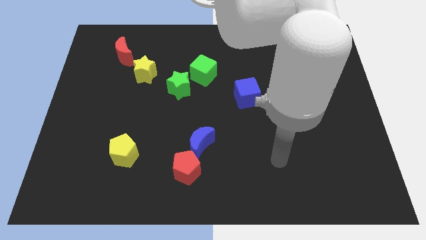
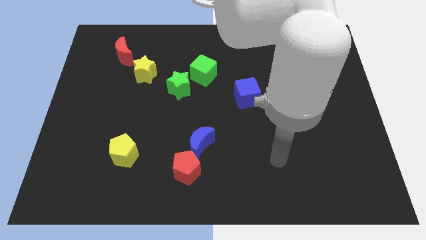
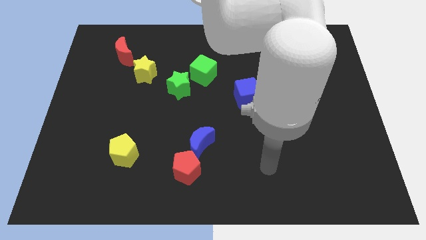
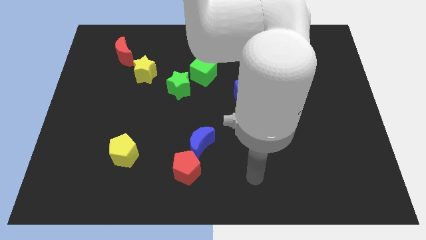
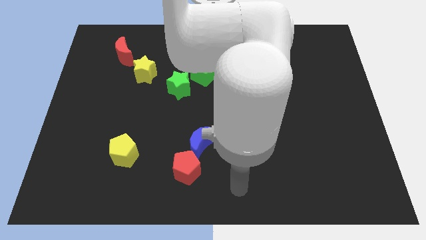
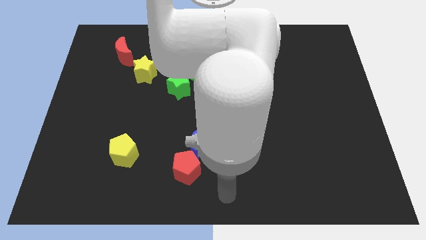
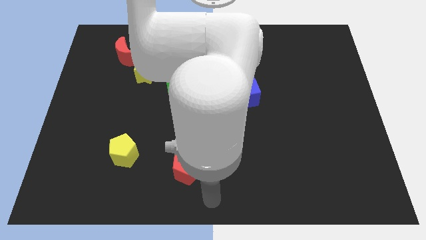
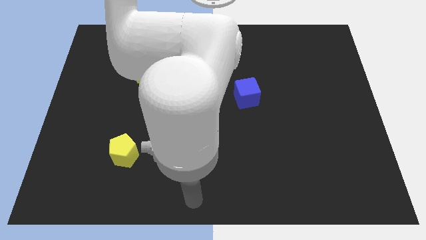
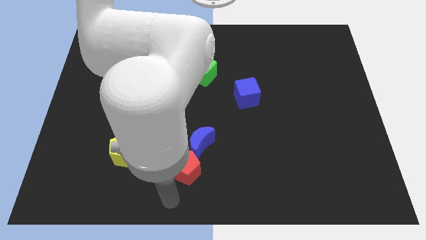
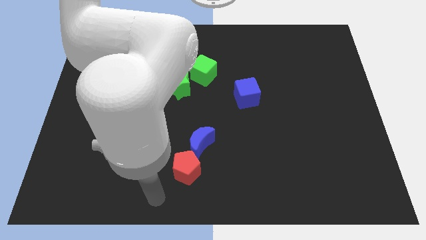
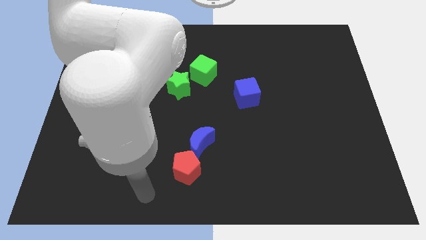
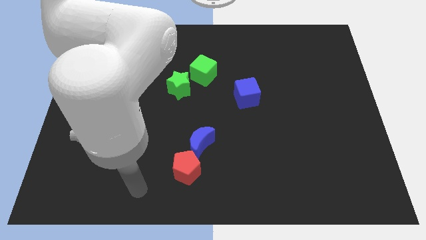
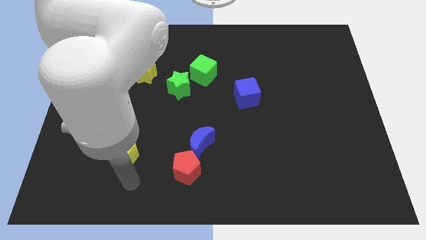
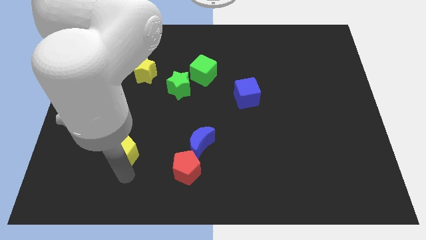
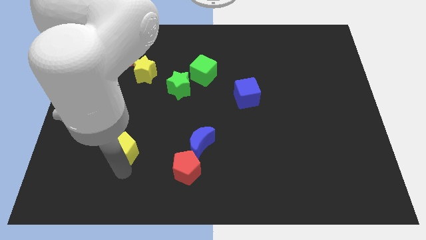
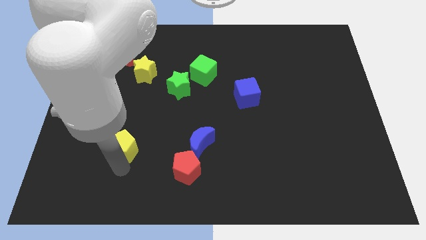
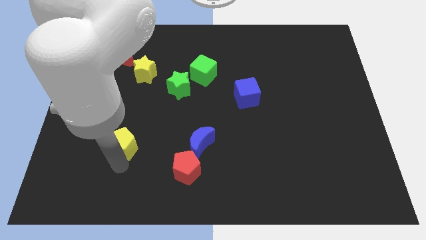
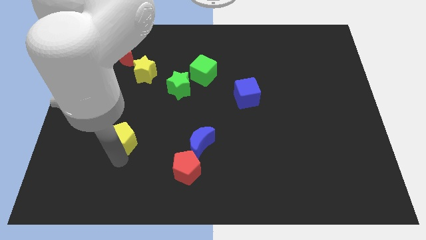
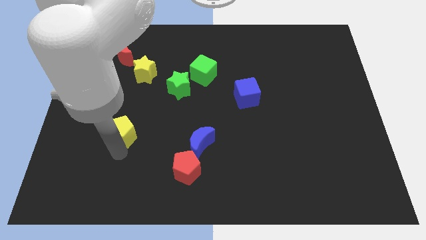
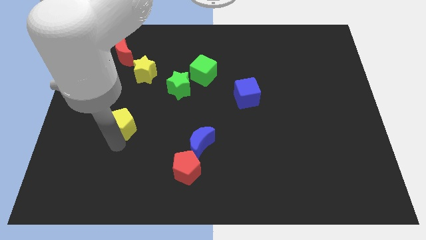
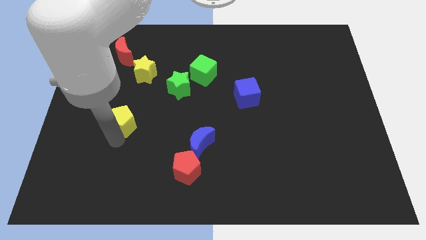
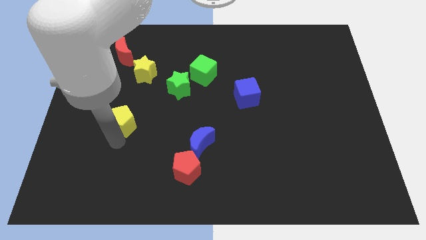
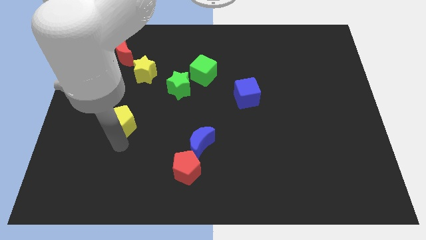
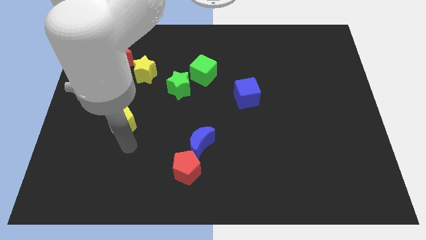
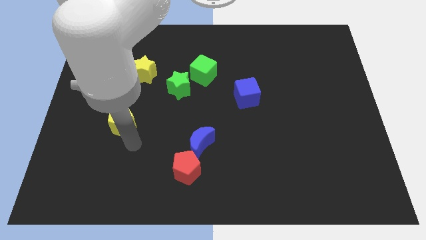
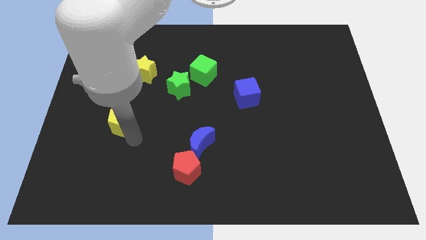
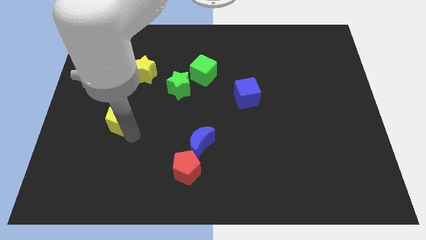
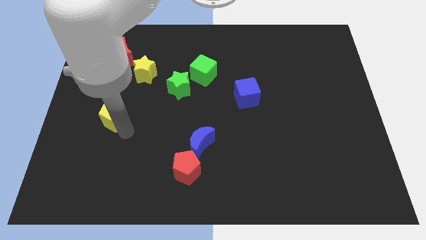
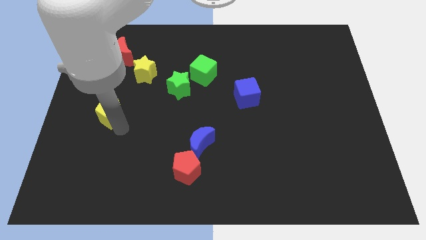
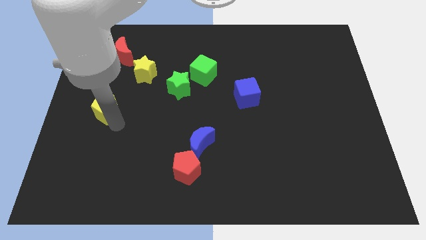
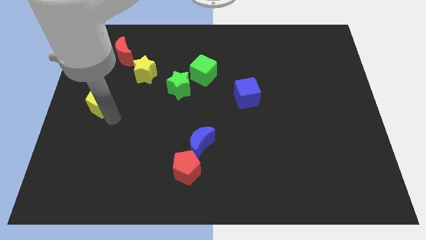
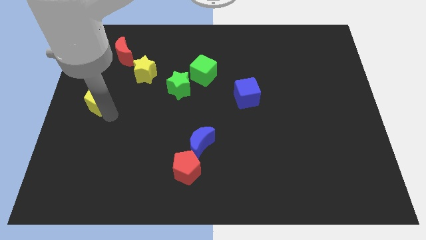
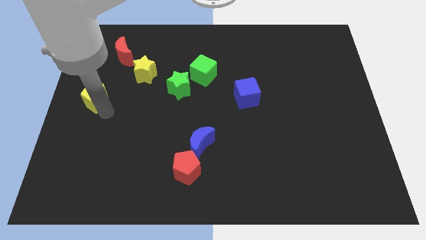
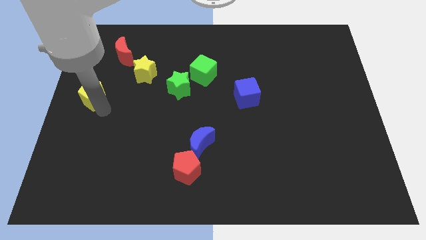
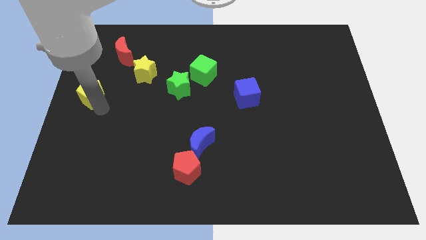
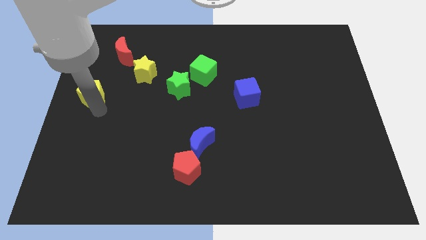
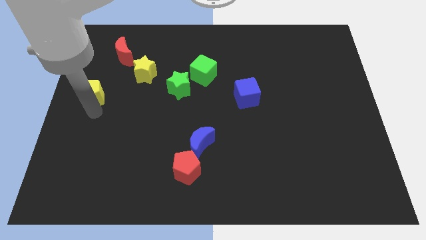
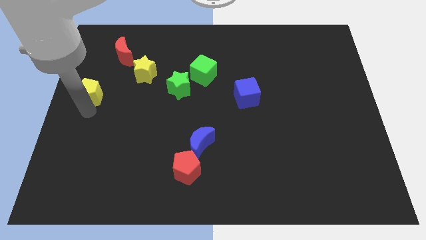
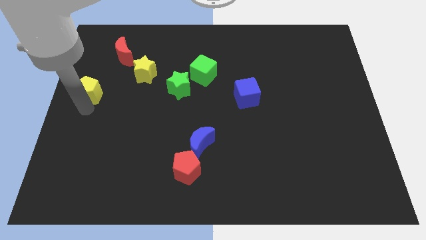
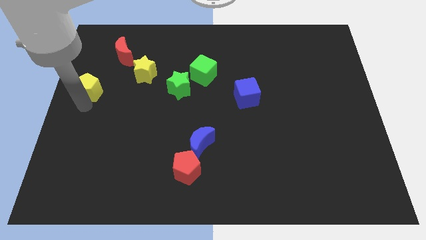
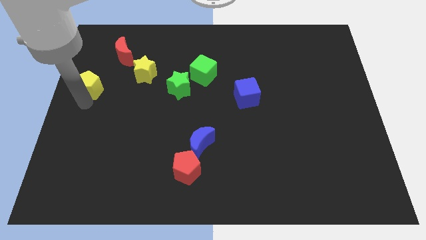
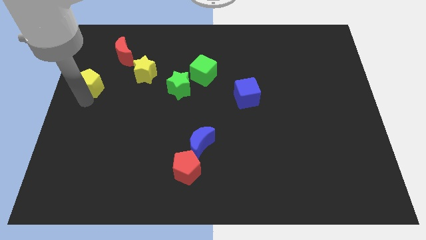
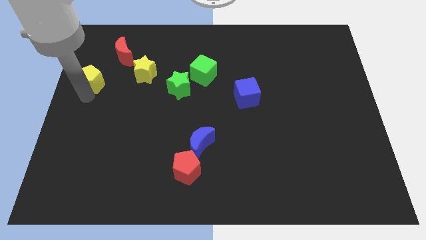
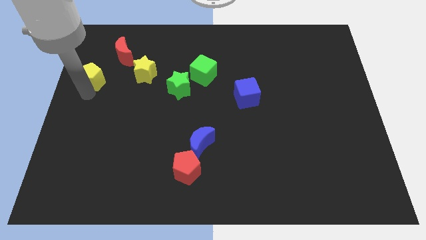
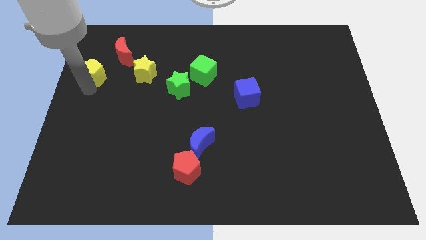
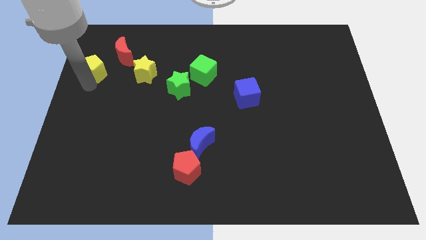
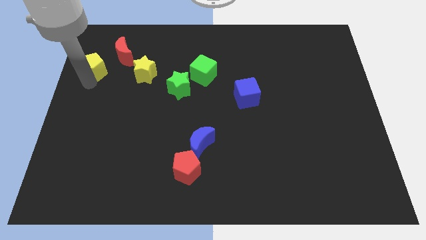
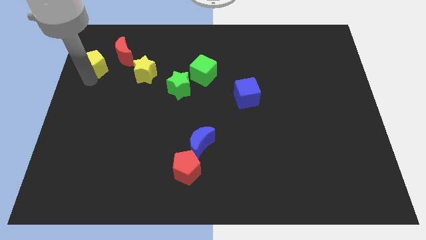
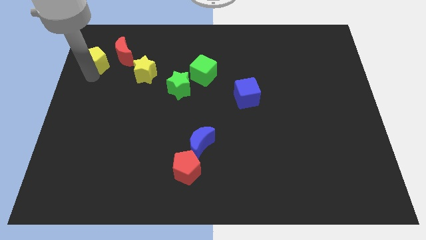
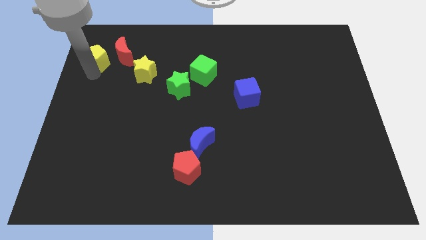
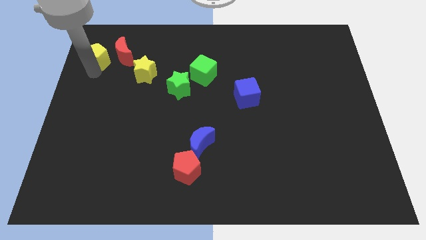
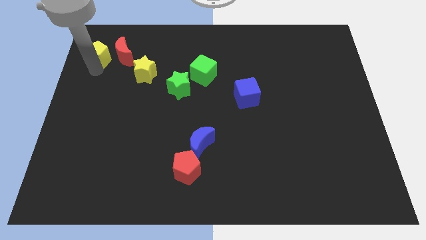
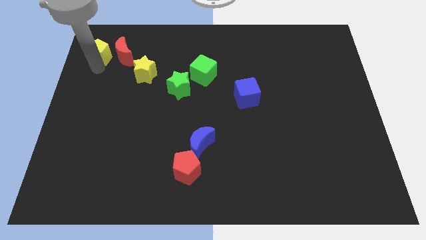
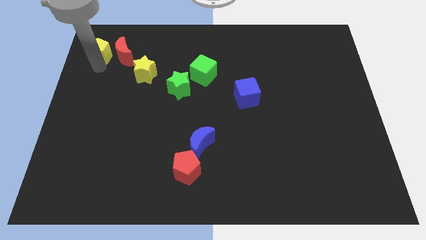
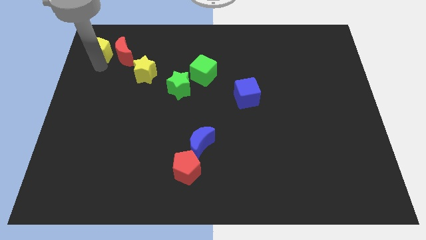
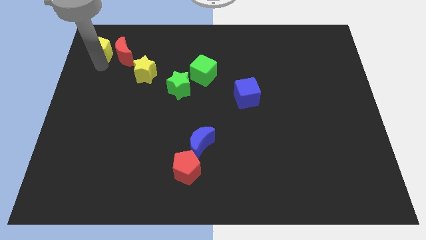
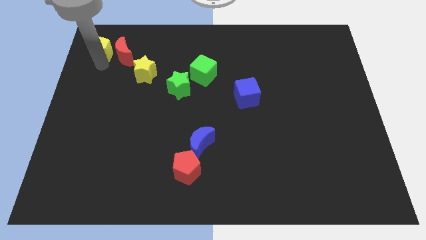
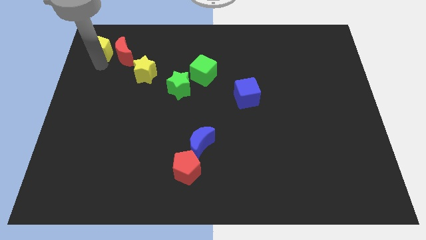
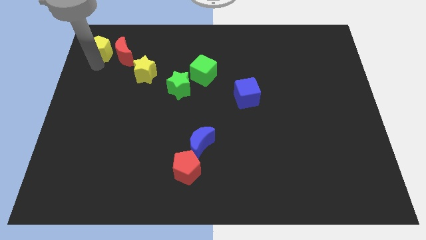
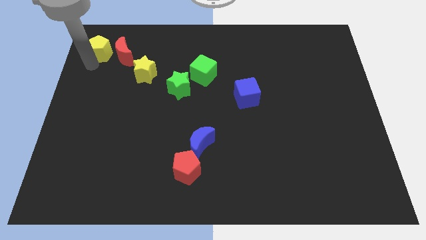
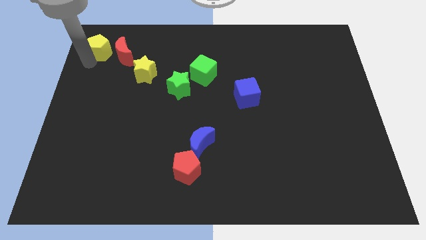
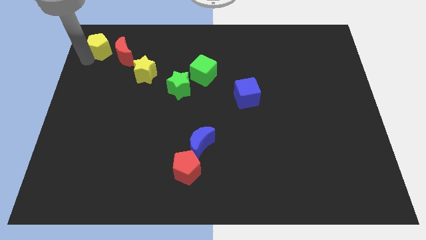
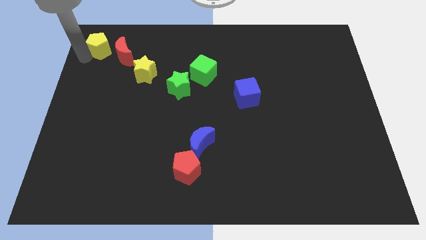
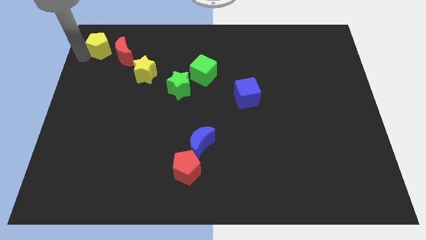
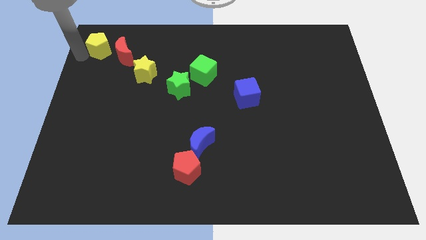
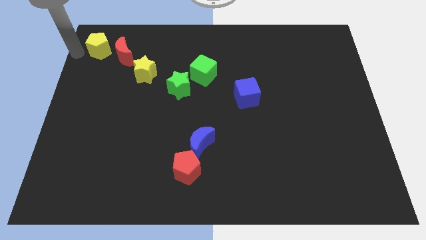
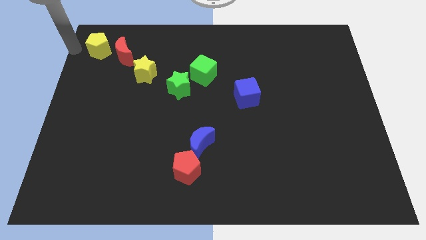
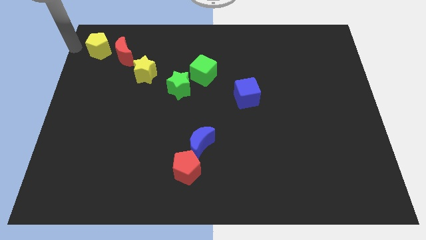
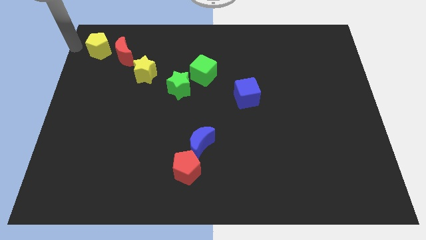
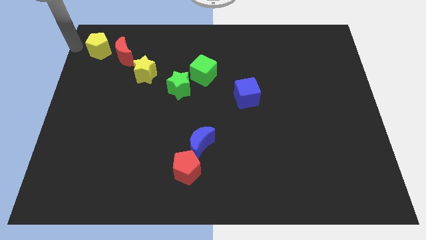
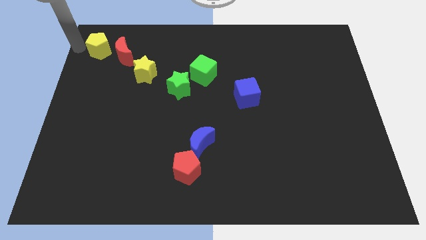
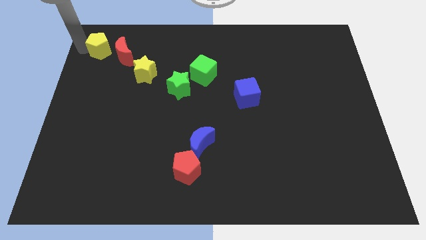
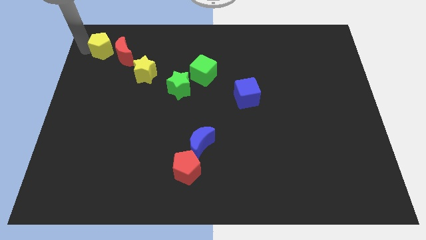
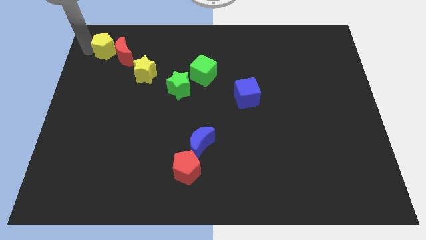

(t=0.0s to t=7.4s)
slide the yellow pentagon to the red moon

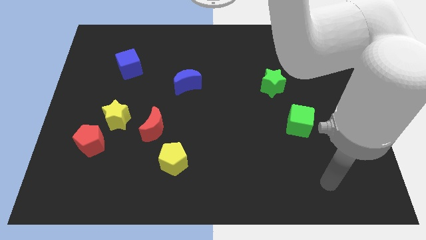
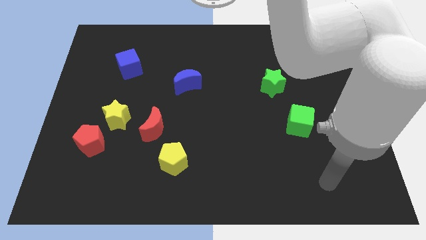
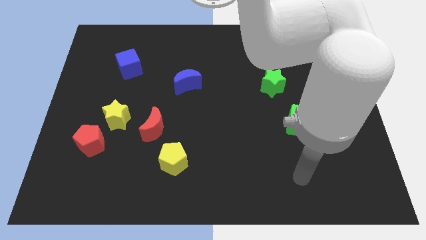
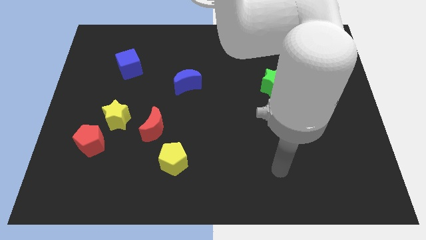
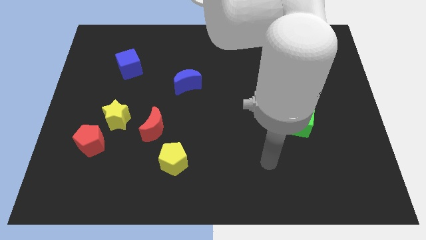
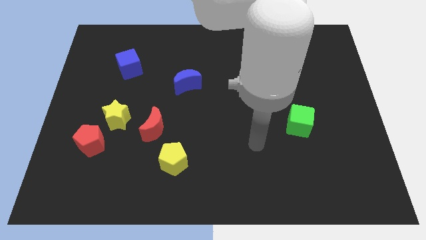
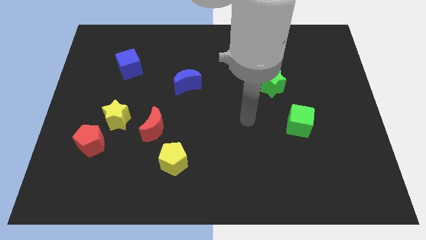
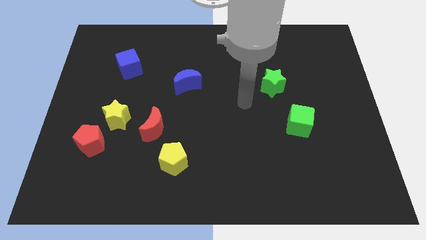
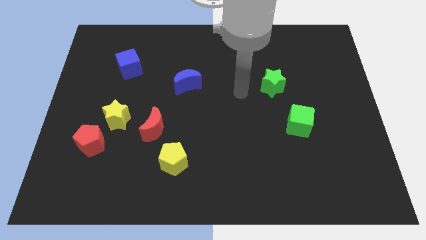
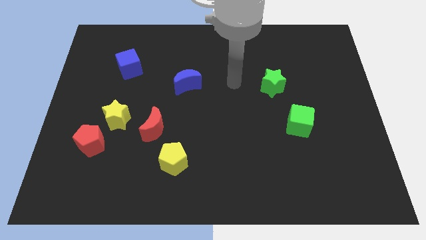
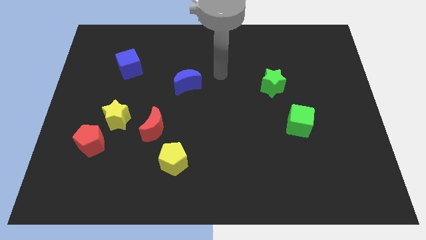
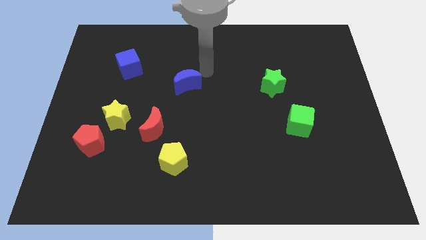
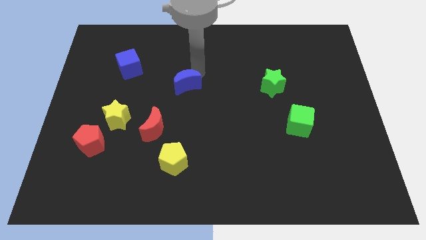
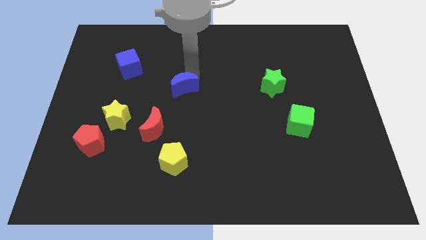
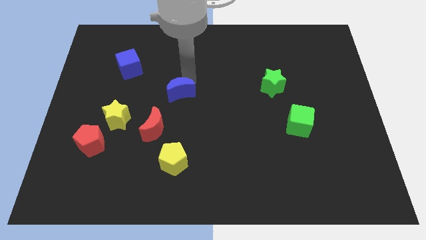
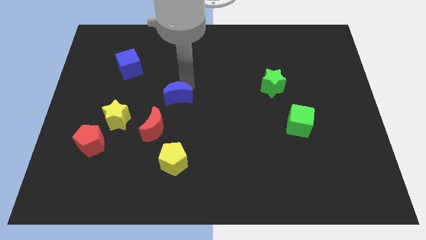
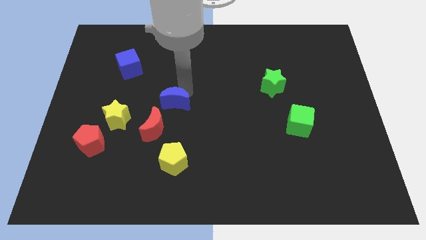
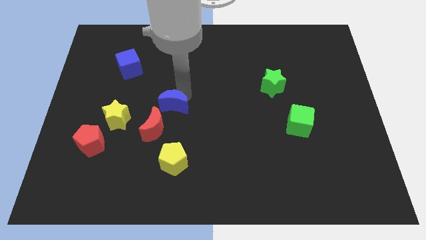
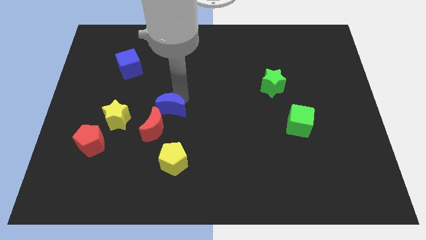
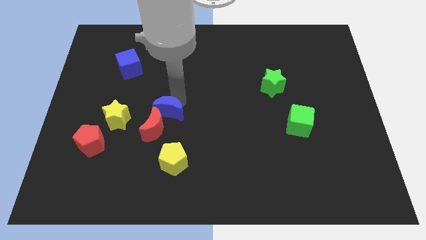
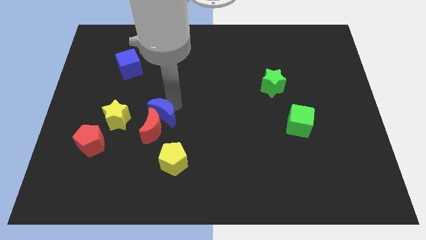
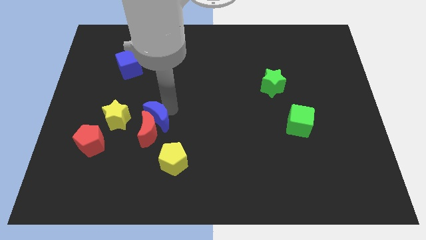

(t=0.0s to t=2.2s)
put the blue moon to the red moon
